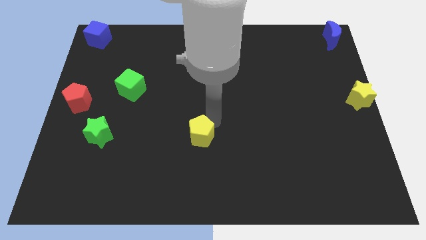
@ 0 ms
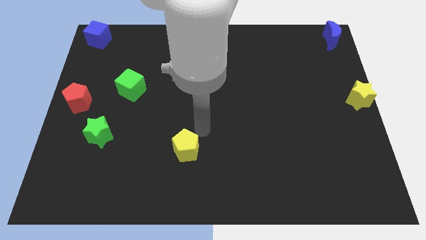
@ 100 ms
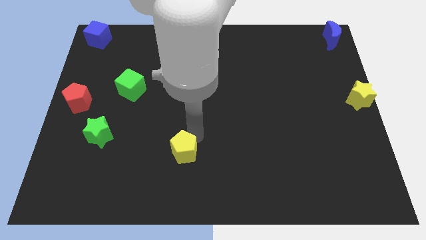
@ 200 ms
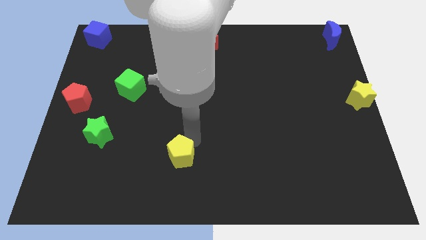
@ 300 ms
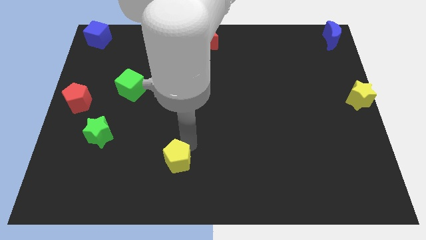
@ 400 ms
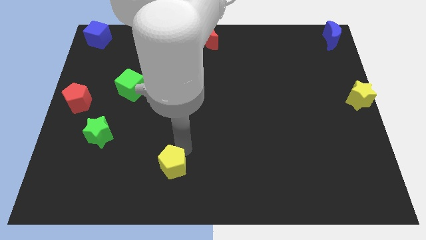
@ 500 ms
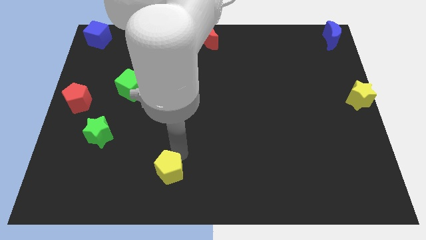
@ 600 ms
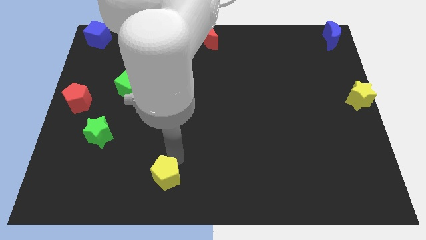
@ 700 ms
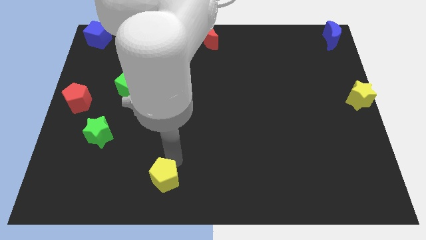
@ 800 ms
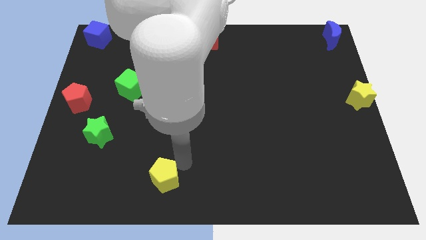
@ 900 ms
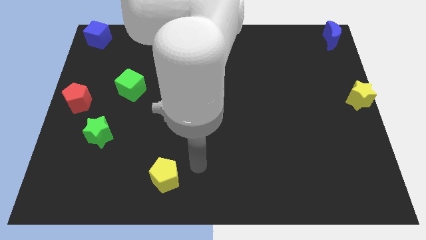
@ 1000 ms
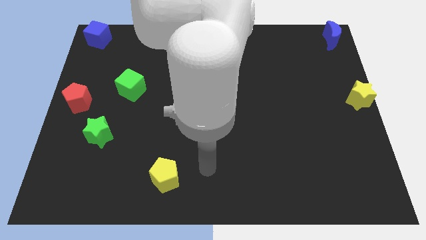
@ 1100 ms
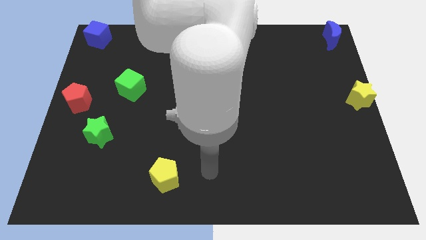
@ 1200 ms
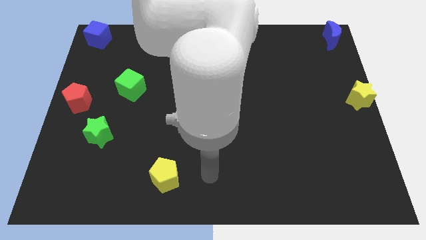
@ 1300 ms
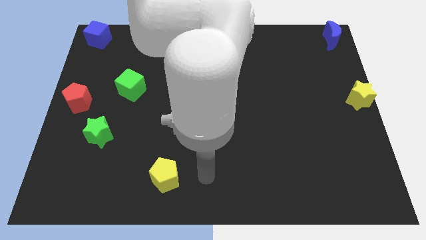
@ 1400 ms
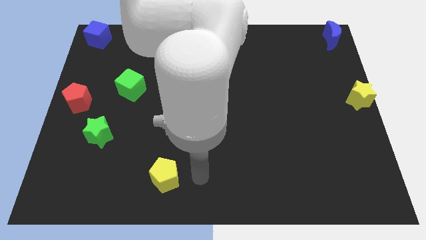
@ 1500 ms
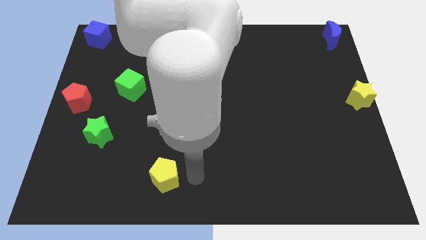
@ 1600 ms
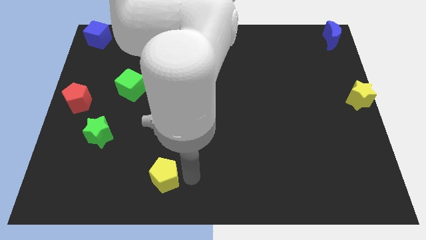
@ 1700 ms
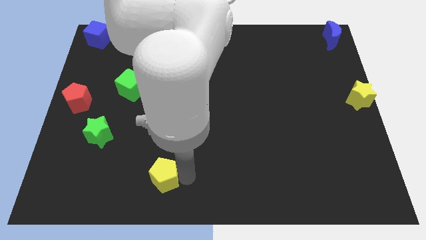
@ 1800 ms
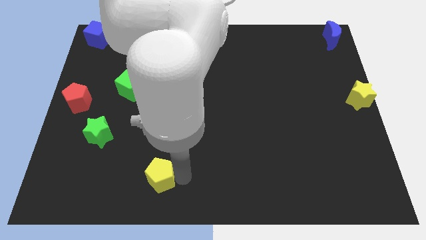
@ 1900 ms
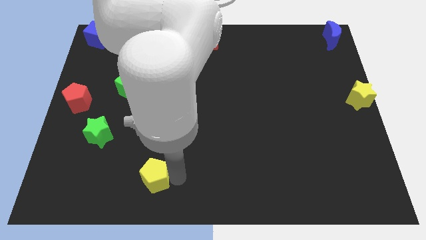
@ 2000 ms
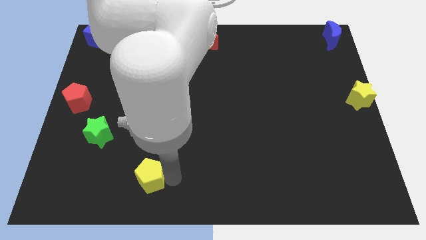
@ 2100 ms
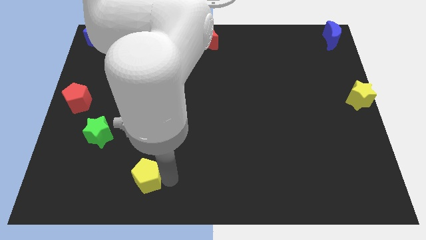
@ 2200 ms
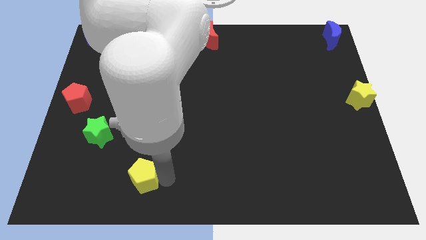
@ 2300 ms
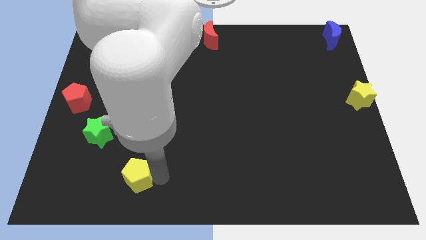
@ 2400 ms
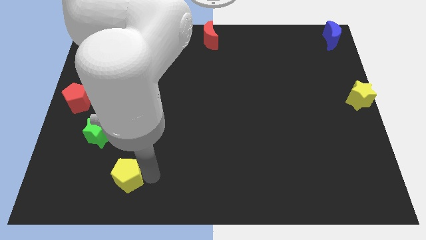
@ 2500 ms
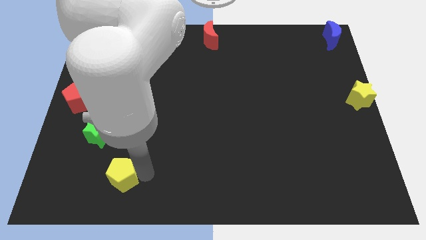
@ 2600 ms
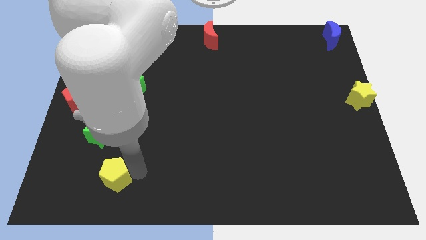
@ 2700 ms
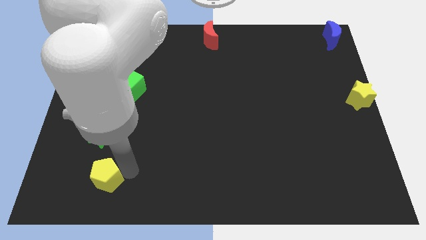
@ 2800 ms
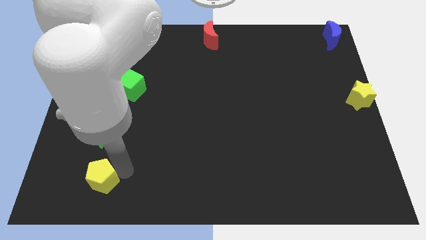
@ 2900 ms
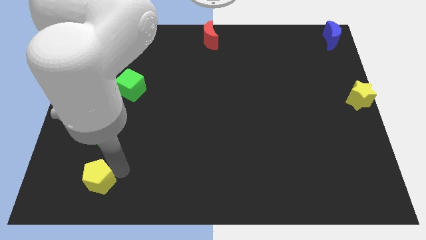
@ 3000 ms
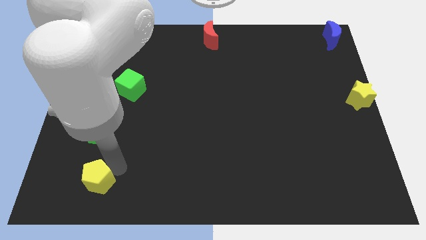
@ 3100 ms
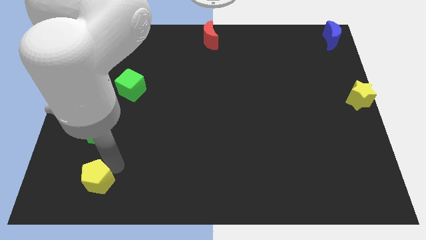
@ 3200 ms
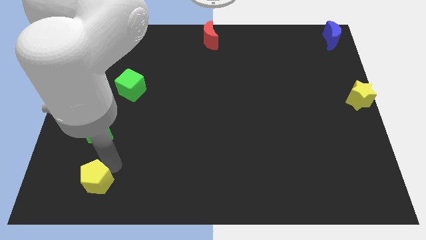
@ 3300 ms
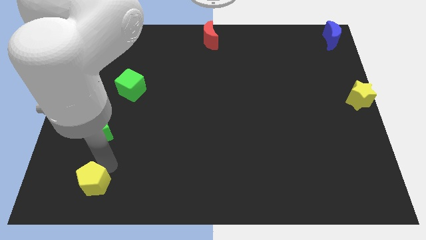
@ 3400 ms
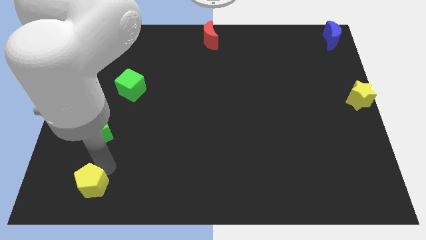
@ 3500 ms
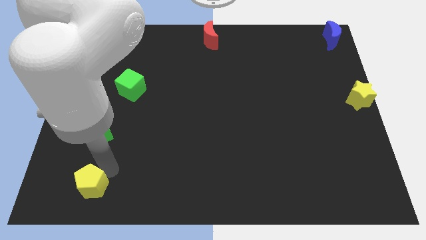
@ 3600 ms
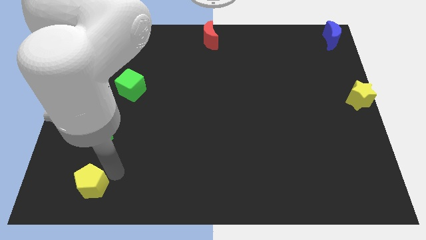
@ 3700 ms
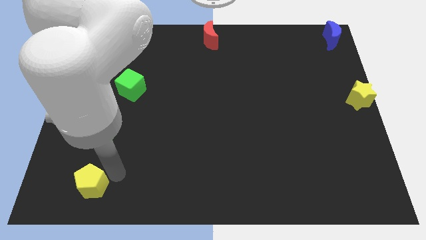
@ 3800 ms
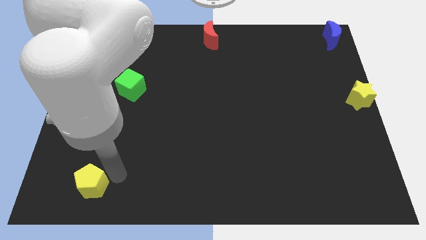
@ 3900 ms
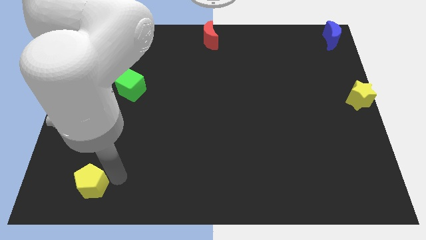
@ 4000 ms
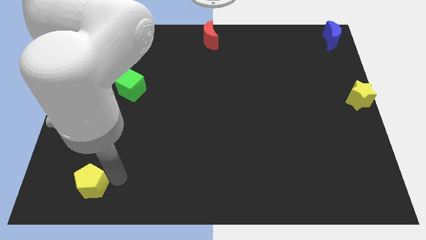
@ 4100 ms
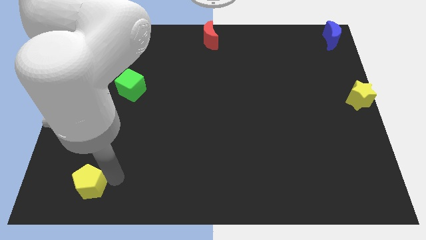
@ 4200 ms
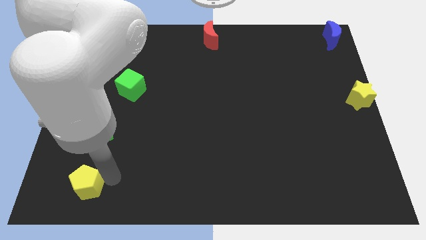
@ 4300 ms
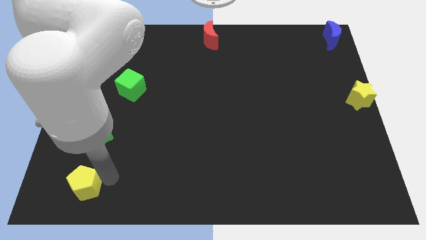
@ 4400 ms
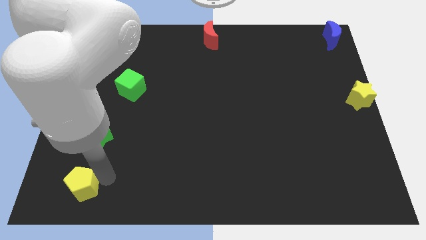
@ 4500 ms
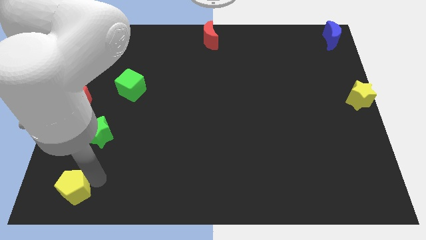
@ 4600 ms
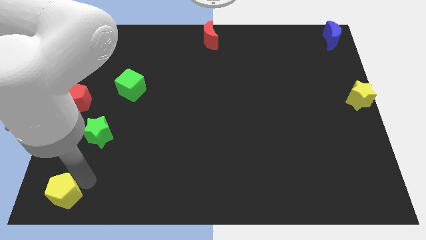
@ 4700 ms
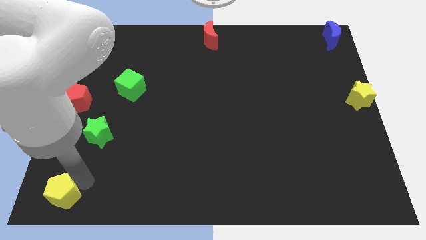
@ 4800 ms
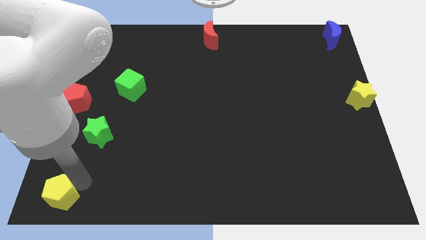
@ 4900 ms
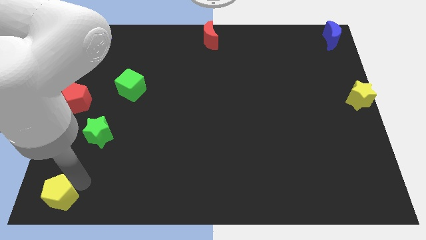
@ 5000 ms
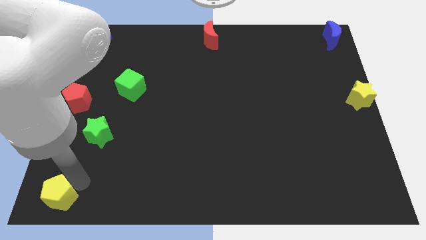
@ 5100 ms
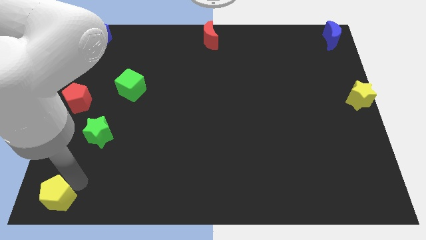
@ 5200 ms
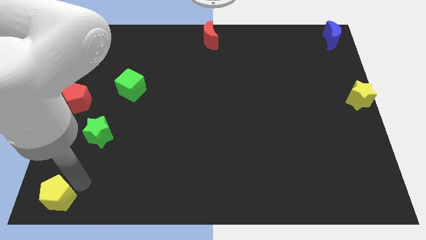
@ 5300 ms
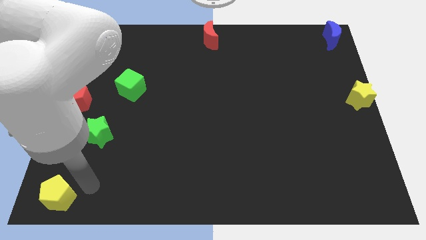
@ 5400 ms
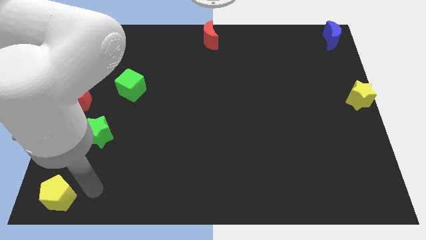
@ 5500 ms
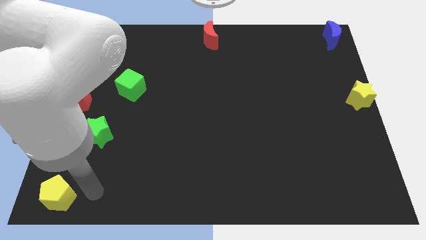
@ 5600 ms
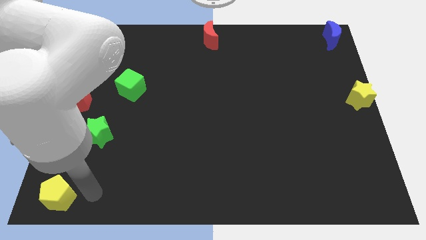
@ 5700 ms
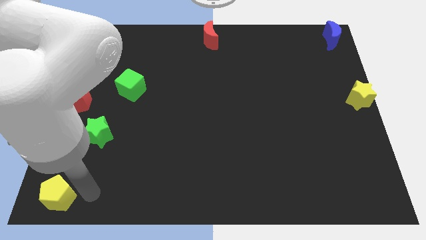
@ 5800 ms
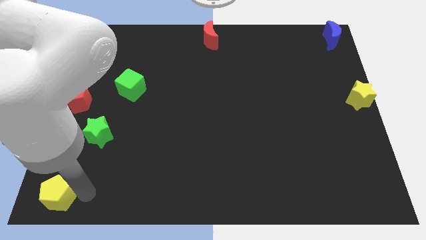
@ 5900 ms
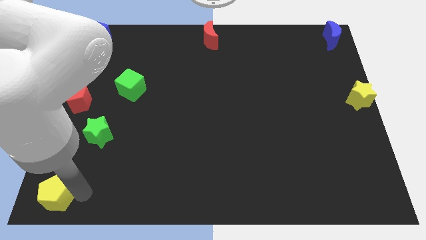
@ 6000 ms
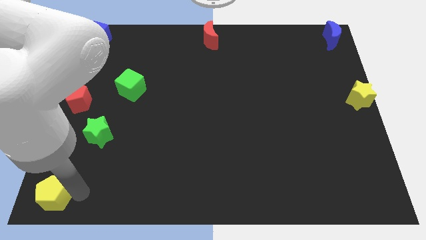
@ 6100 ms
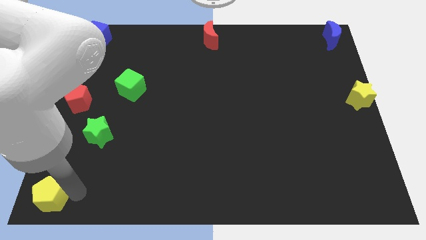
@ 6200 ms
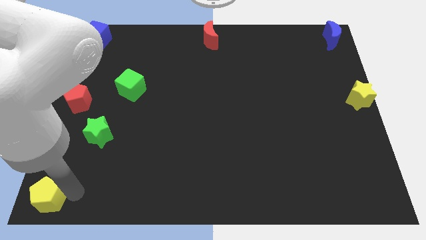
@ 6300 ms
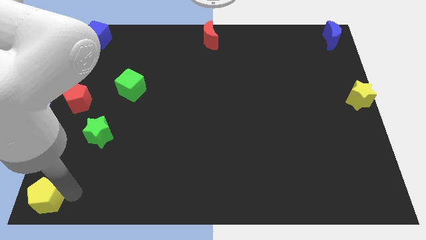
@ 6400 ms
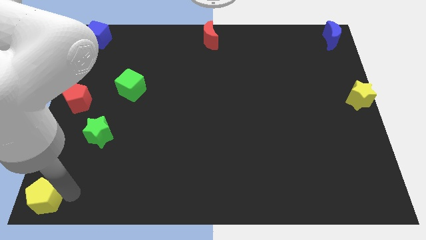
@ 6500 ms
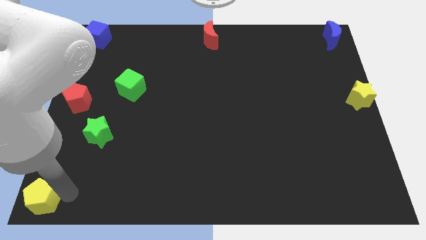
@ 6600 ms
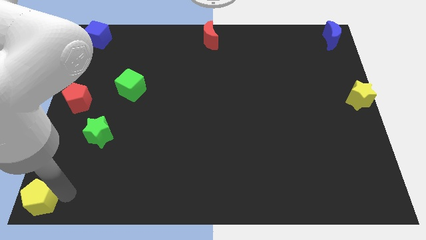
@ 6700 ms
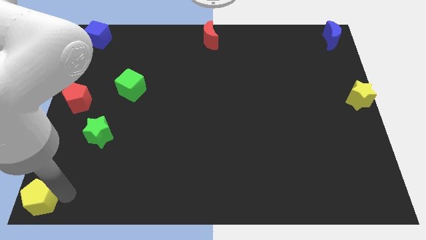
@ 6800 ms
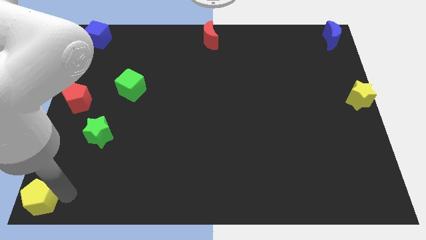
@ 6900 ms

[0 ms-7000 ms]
place the yellow pentagon at the bottom left corner of the board

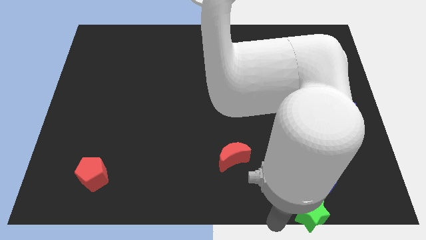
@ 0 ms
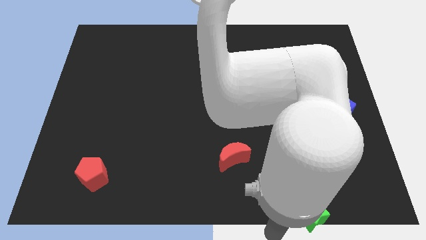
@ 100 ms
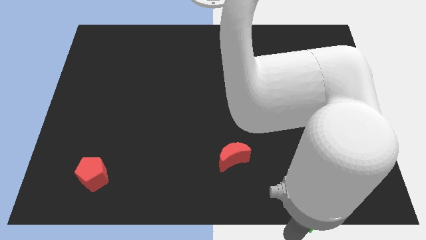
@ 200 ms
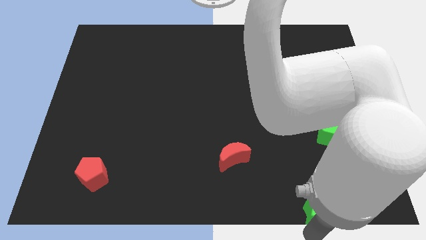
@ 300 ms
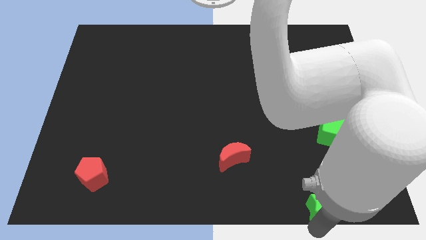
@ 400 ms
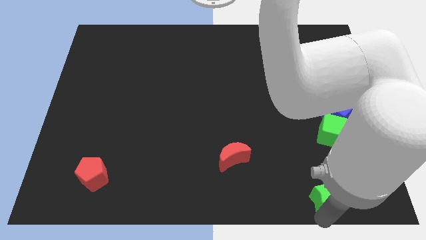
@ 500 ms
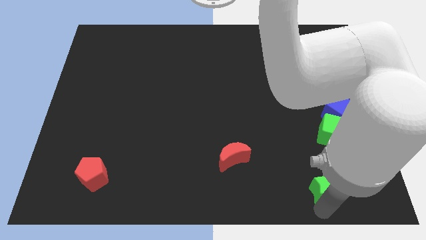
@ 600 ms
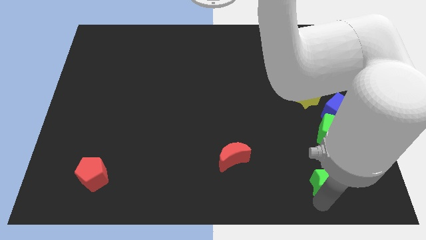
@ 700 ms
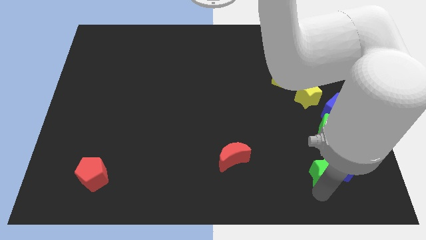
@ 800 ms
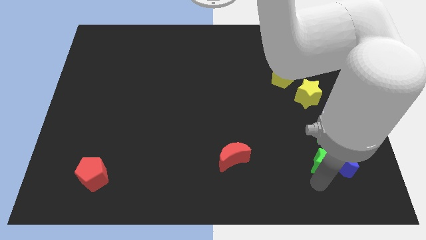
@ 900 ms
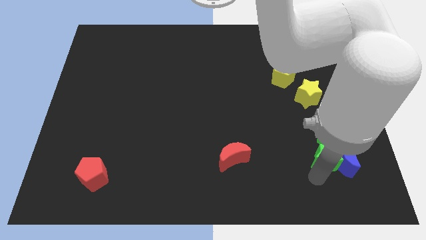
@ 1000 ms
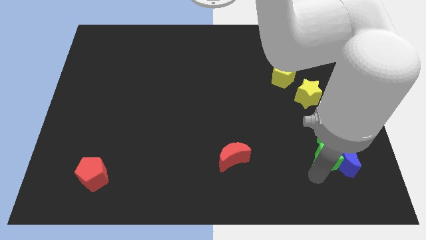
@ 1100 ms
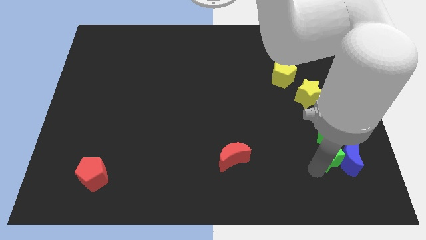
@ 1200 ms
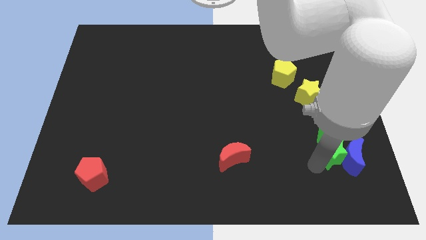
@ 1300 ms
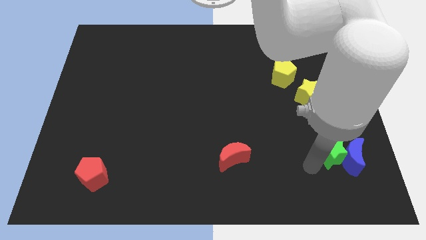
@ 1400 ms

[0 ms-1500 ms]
place the green star left to the blue moon

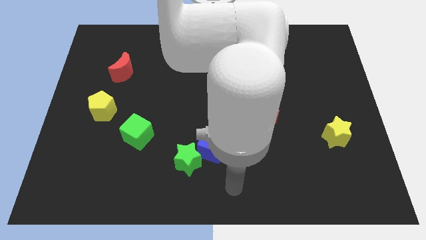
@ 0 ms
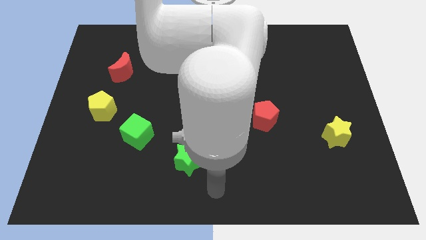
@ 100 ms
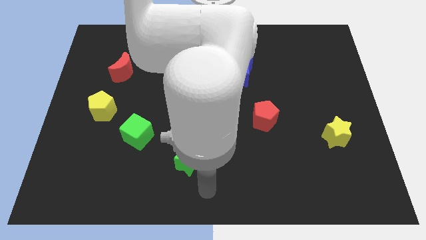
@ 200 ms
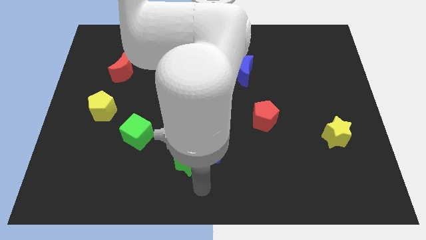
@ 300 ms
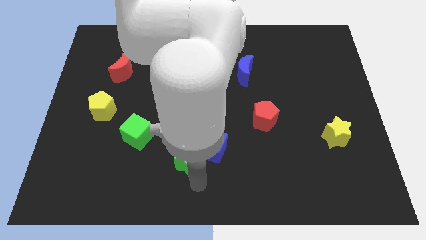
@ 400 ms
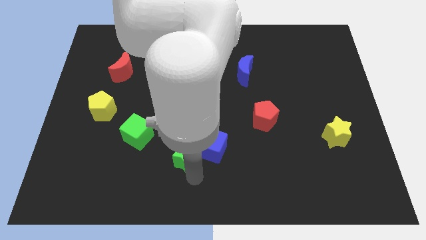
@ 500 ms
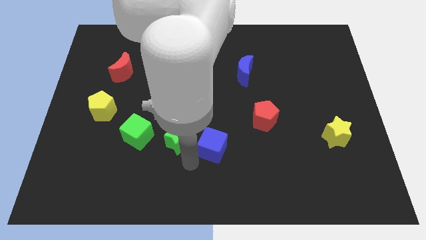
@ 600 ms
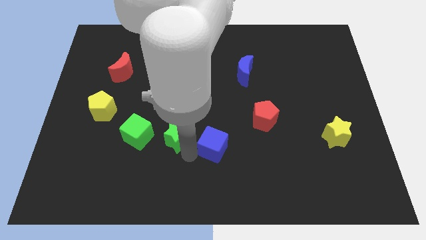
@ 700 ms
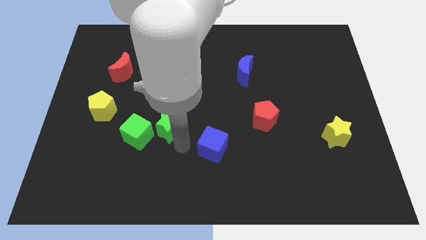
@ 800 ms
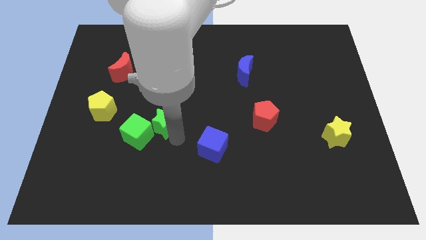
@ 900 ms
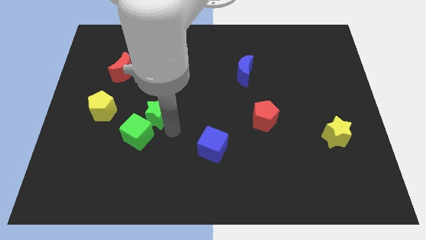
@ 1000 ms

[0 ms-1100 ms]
move the green star away from the blue cube
